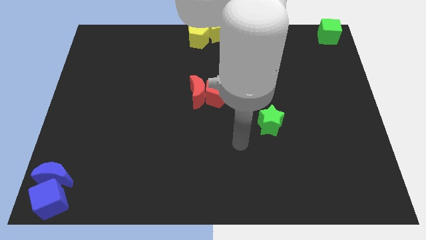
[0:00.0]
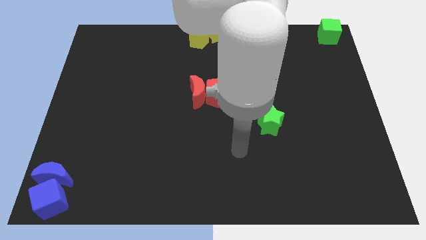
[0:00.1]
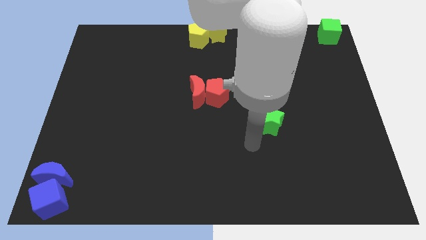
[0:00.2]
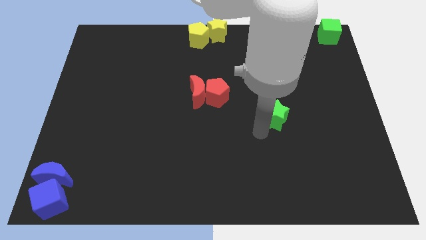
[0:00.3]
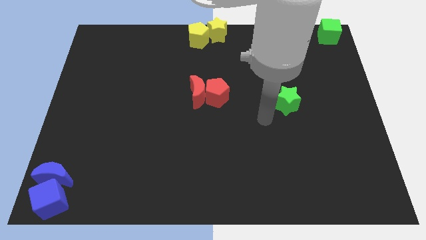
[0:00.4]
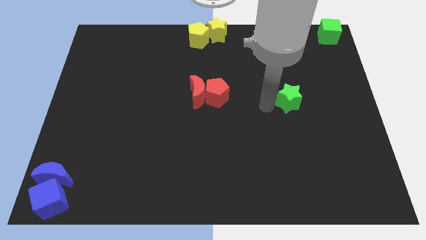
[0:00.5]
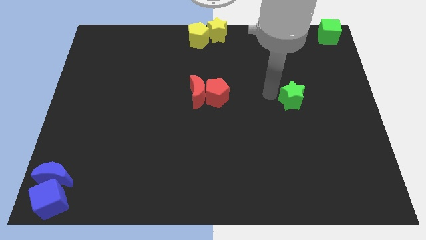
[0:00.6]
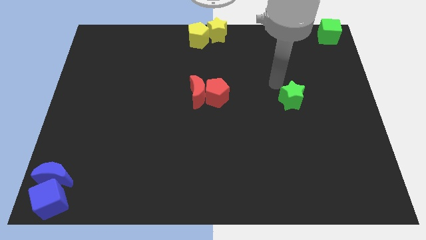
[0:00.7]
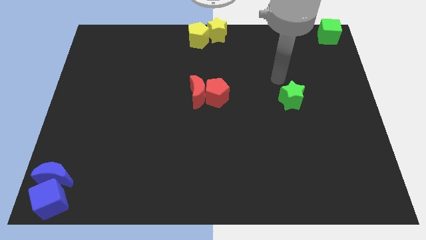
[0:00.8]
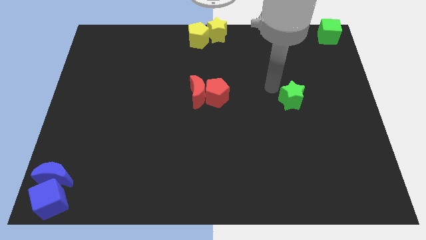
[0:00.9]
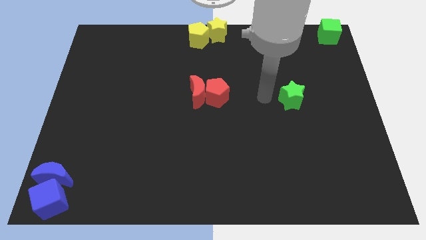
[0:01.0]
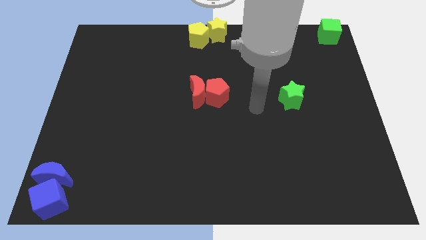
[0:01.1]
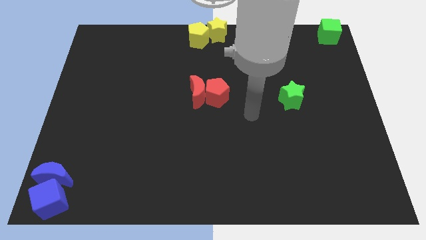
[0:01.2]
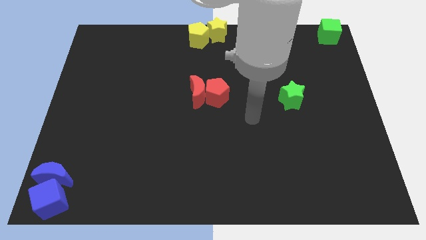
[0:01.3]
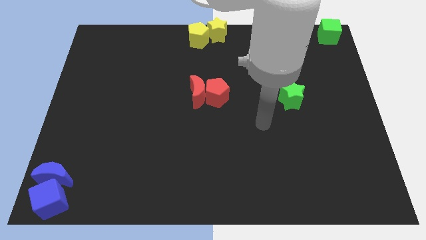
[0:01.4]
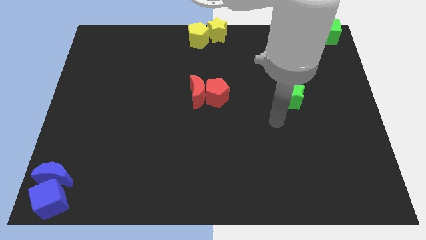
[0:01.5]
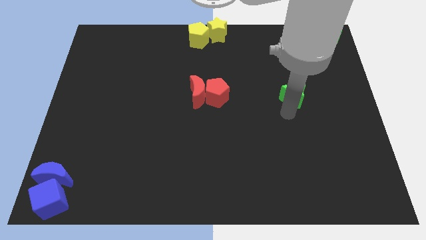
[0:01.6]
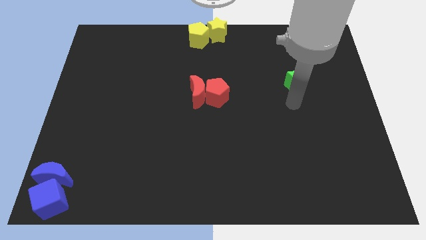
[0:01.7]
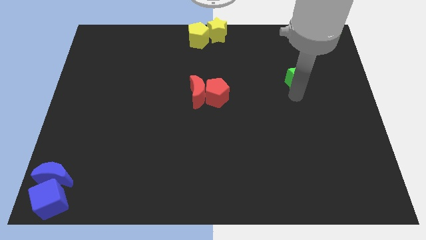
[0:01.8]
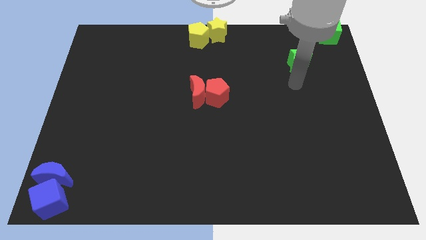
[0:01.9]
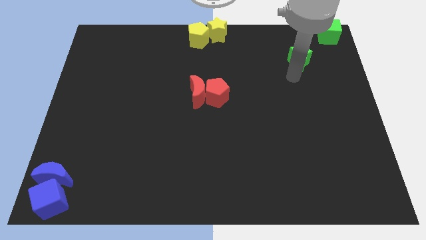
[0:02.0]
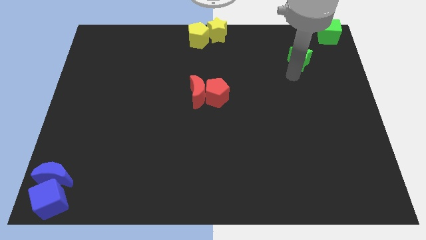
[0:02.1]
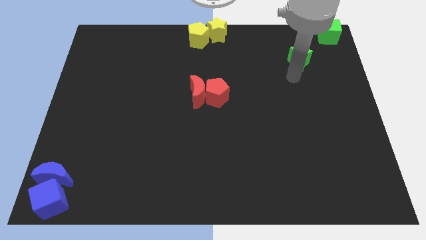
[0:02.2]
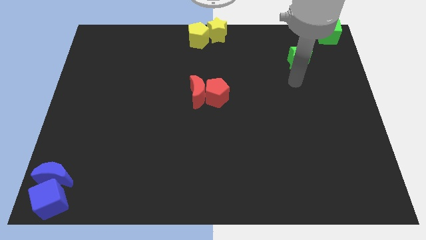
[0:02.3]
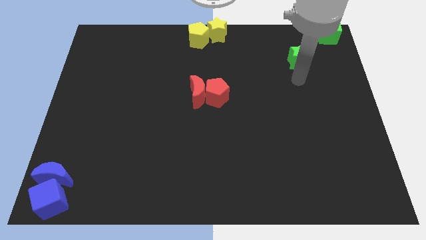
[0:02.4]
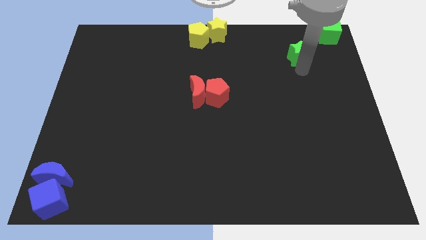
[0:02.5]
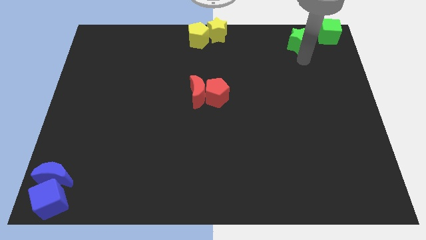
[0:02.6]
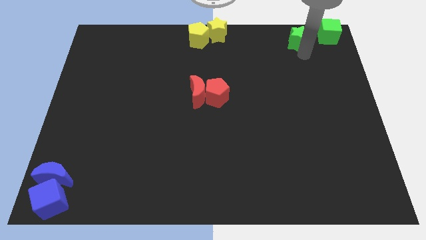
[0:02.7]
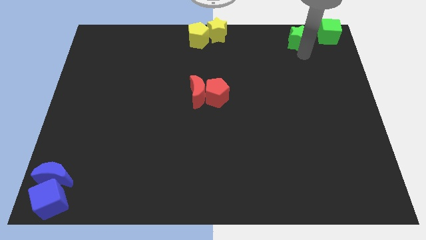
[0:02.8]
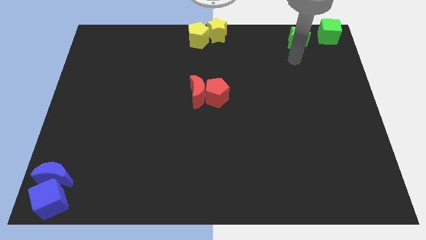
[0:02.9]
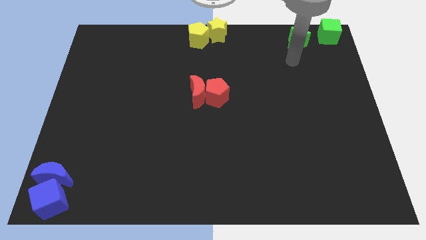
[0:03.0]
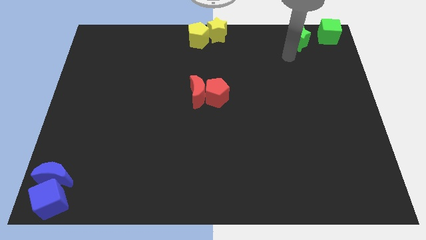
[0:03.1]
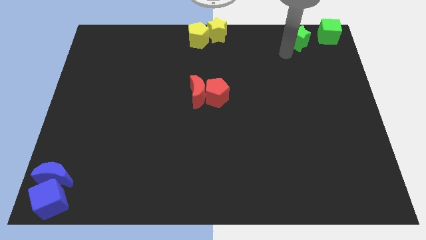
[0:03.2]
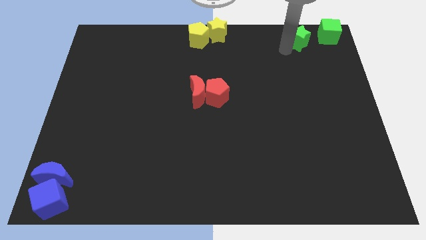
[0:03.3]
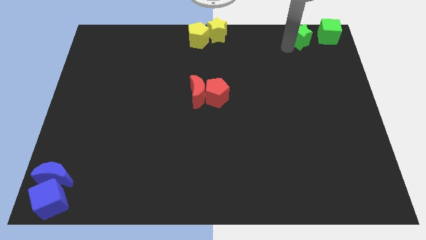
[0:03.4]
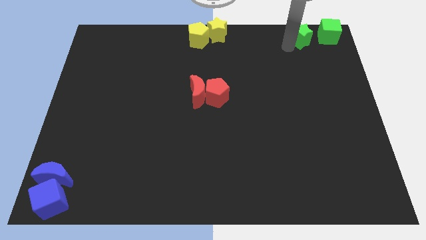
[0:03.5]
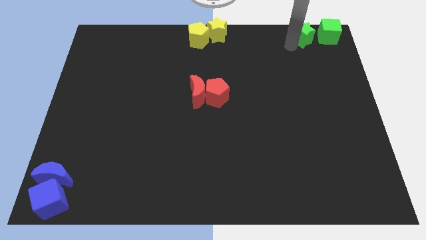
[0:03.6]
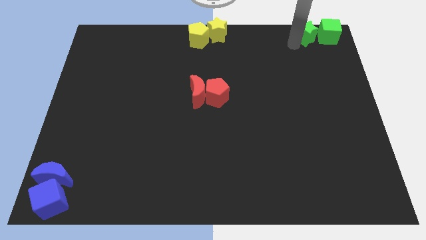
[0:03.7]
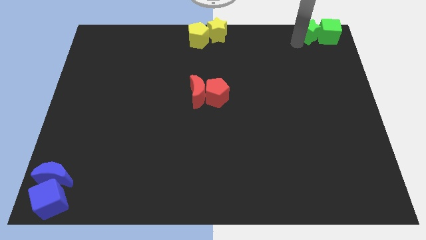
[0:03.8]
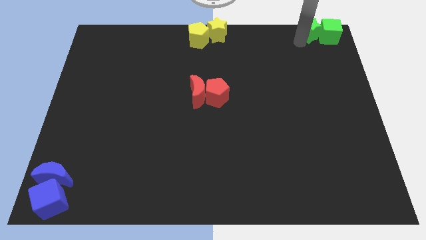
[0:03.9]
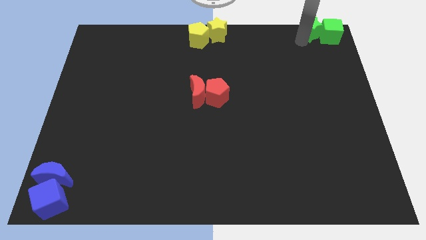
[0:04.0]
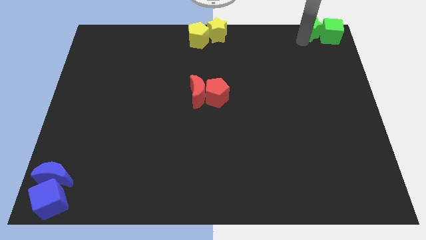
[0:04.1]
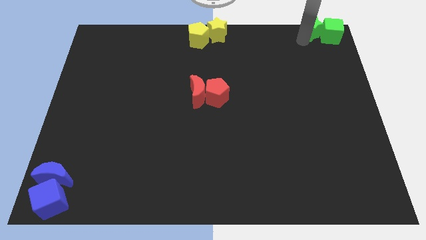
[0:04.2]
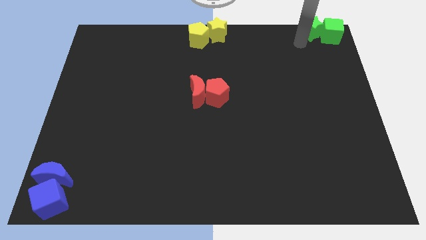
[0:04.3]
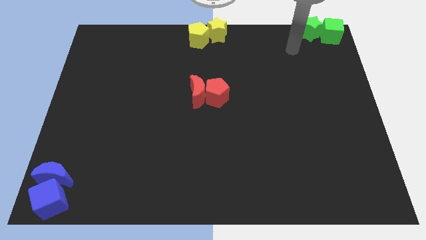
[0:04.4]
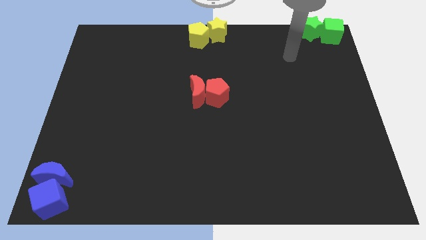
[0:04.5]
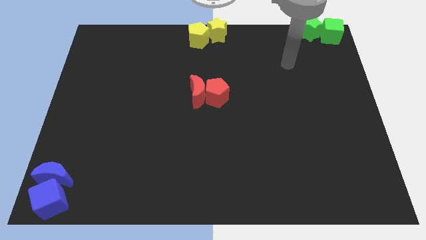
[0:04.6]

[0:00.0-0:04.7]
move green star left to the green cube

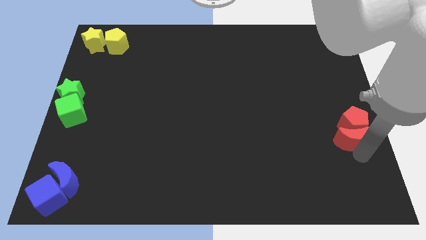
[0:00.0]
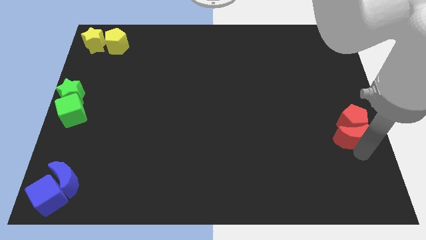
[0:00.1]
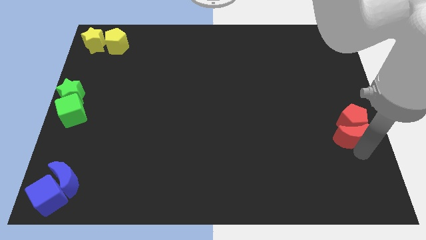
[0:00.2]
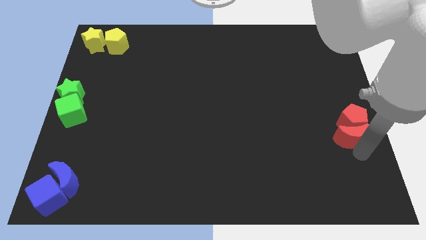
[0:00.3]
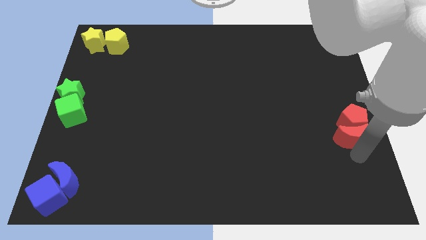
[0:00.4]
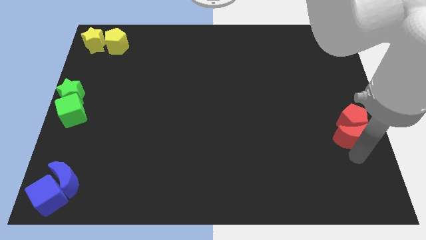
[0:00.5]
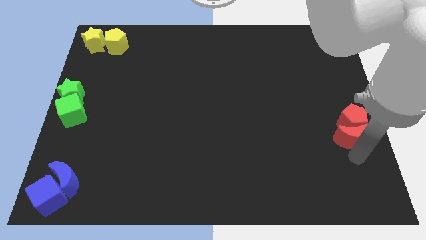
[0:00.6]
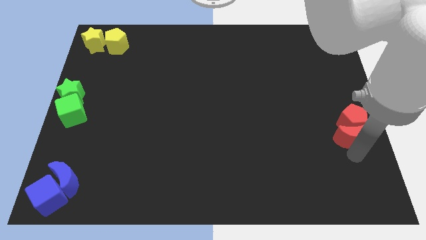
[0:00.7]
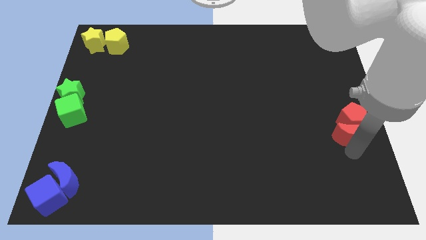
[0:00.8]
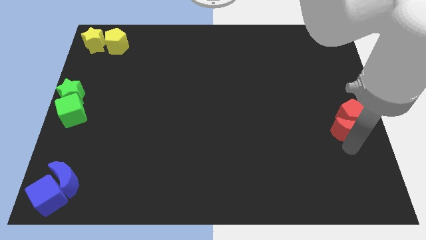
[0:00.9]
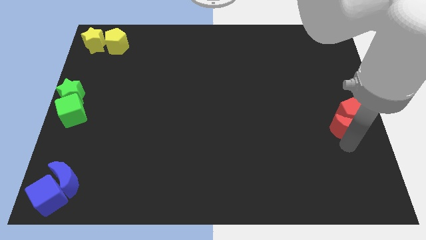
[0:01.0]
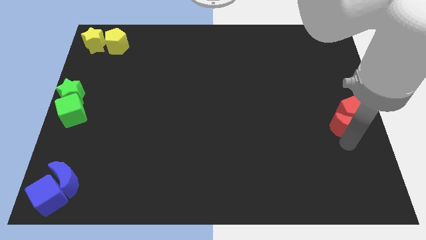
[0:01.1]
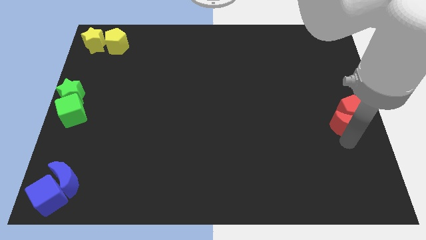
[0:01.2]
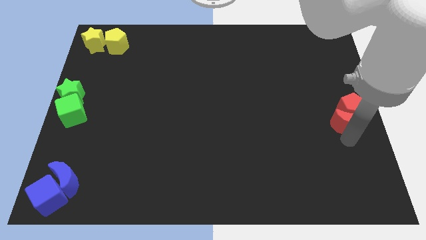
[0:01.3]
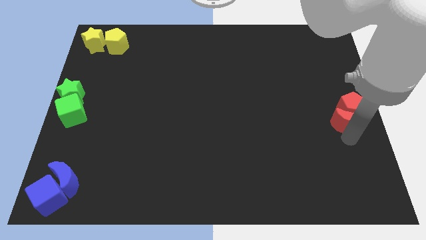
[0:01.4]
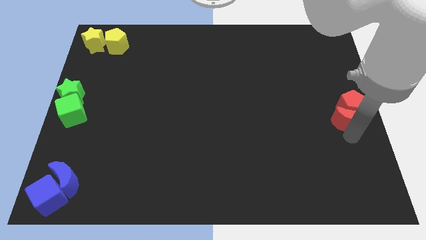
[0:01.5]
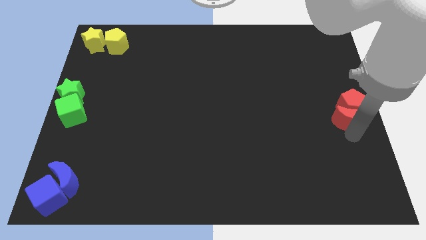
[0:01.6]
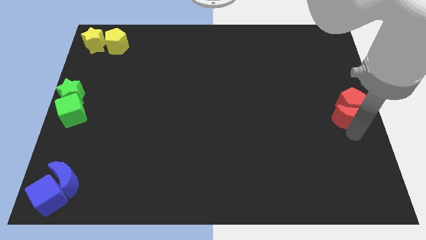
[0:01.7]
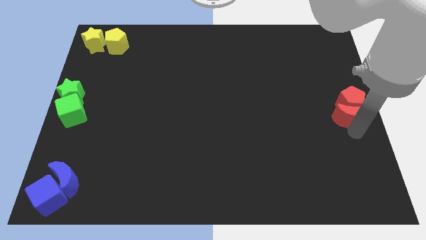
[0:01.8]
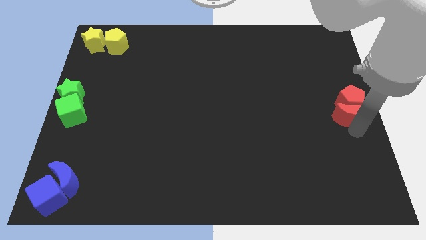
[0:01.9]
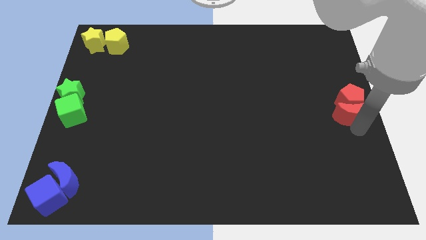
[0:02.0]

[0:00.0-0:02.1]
slightly move the red moon and red pentagon to the right center of the board

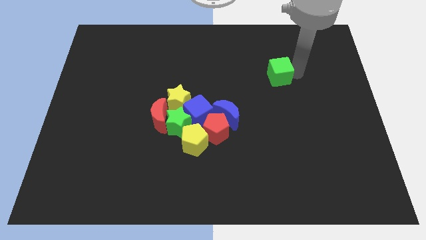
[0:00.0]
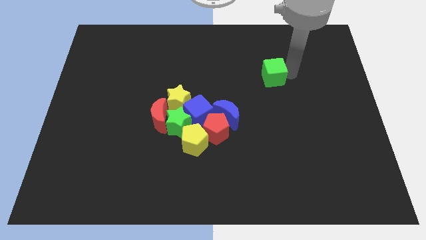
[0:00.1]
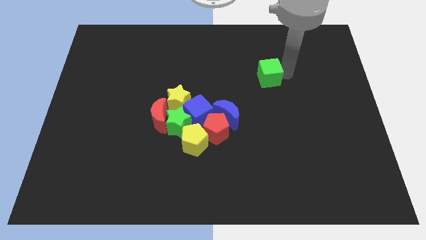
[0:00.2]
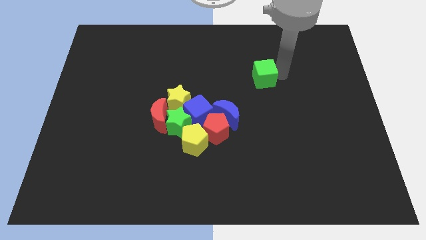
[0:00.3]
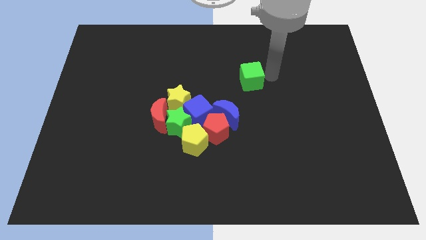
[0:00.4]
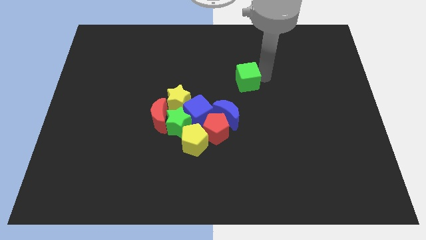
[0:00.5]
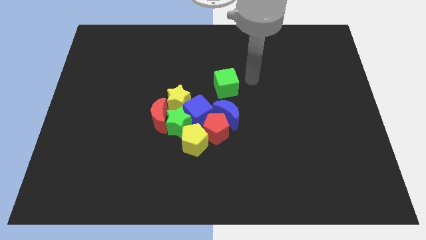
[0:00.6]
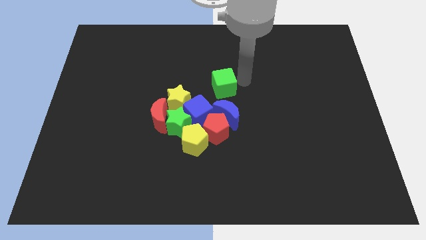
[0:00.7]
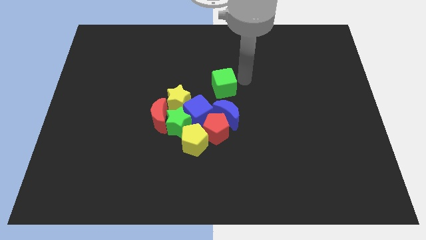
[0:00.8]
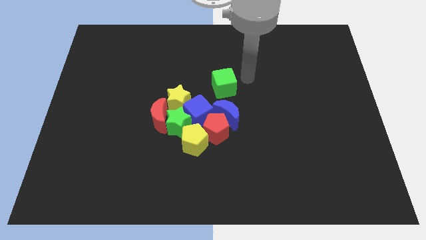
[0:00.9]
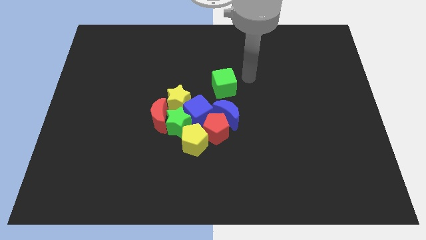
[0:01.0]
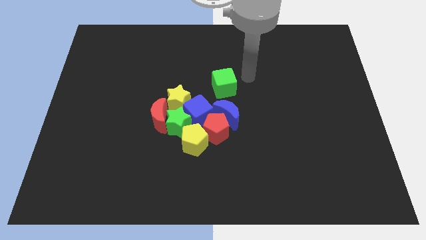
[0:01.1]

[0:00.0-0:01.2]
move the green cube to the left side of the board

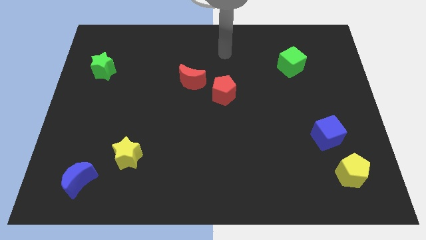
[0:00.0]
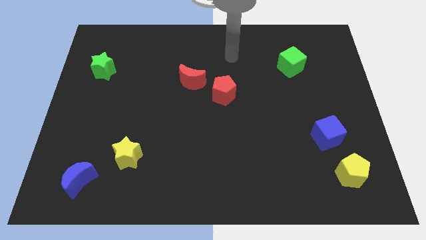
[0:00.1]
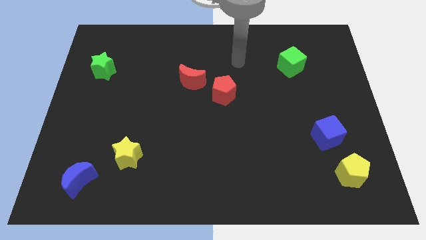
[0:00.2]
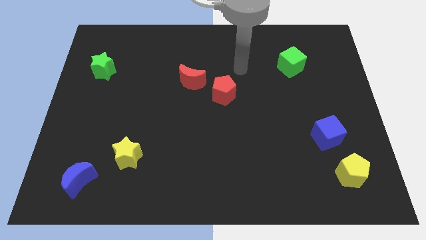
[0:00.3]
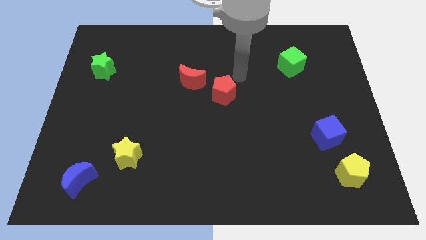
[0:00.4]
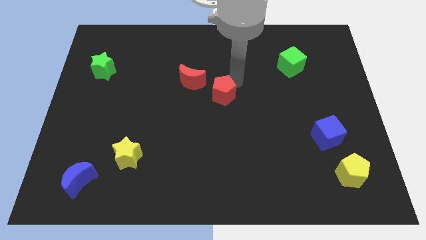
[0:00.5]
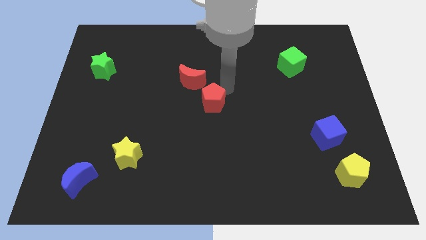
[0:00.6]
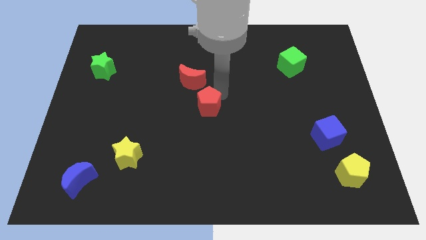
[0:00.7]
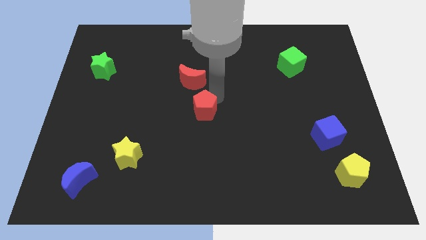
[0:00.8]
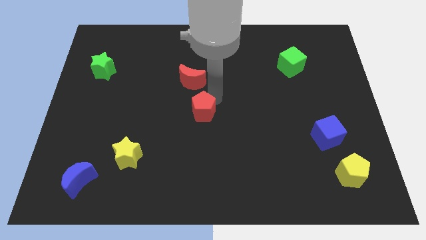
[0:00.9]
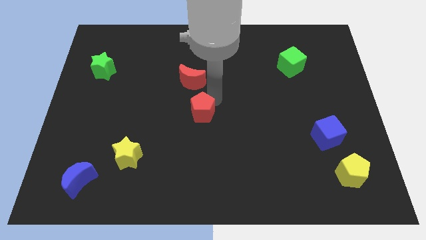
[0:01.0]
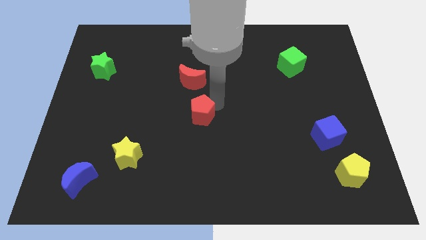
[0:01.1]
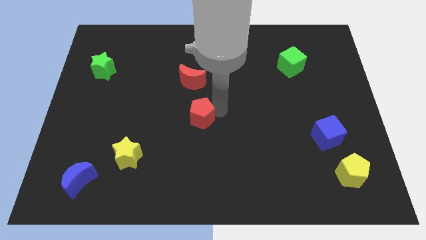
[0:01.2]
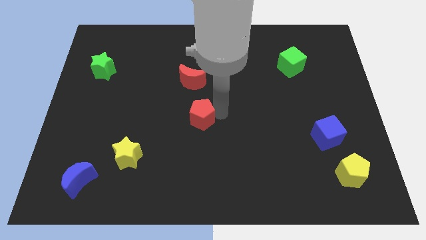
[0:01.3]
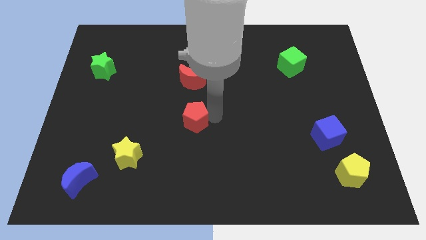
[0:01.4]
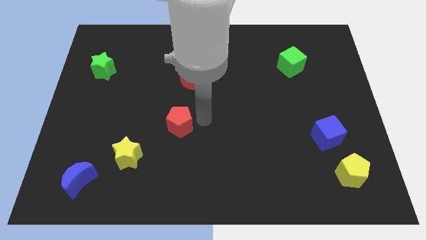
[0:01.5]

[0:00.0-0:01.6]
push the red pentagon left towards yellow star
